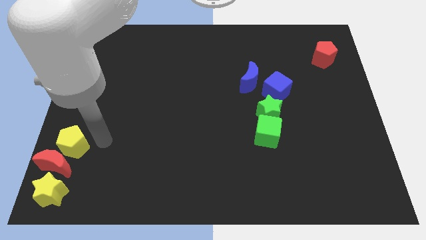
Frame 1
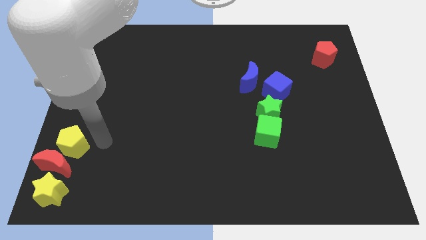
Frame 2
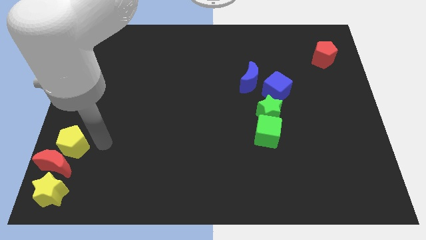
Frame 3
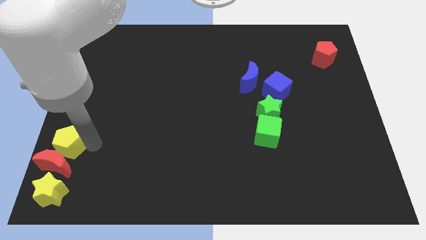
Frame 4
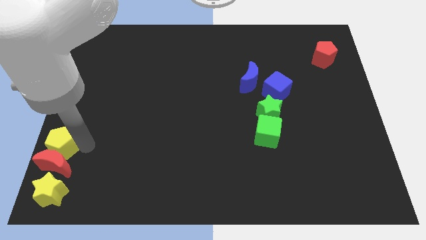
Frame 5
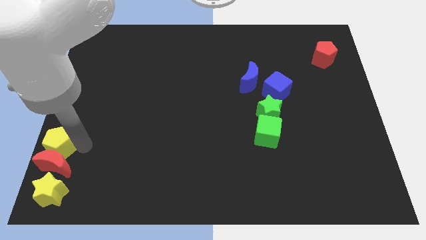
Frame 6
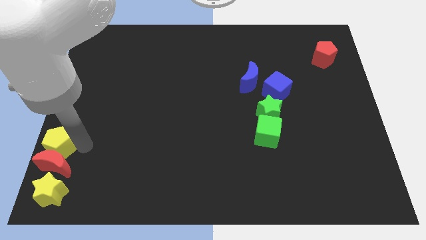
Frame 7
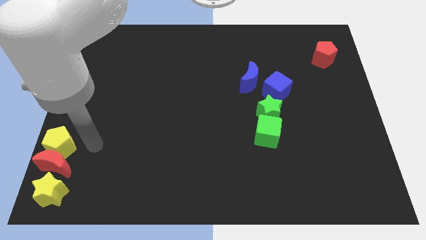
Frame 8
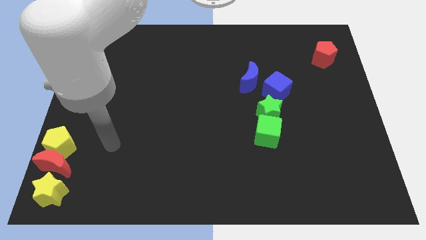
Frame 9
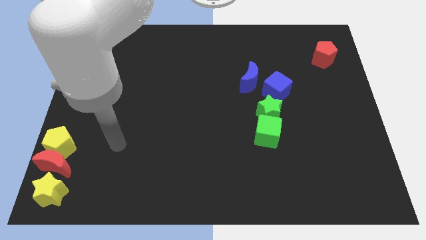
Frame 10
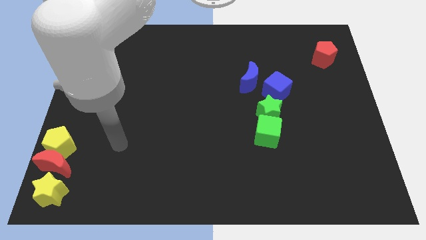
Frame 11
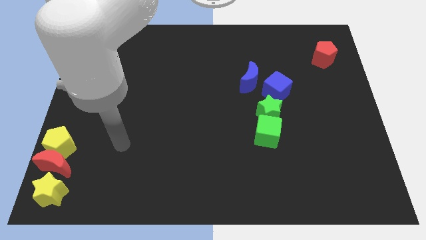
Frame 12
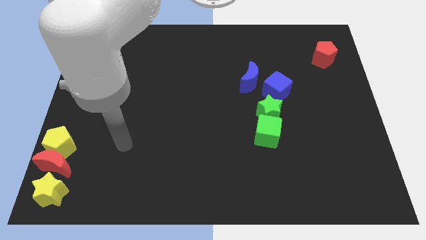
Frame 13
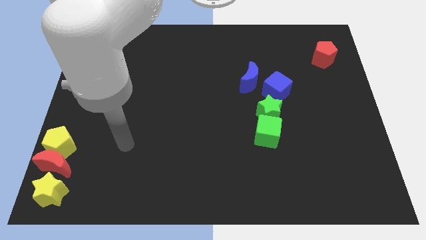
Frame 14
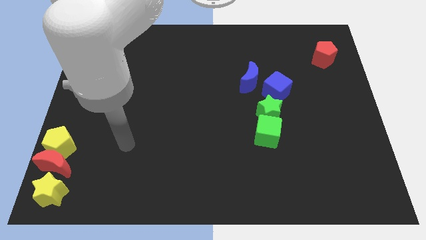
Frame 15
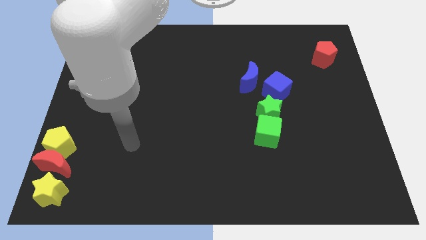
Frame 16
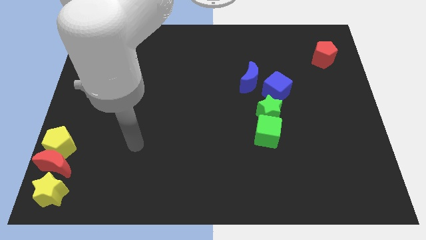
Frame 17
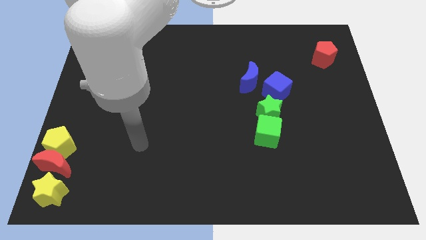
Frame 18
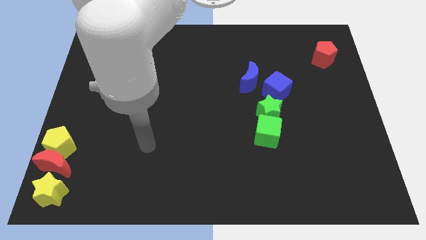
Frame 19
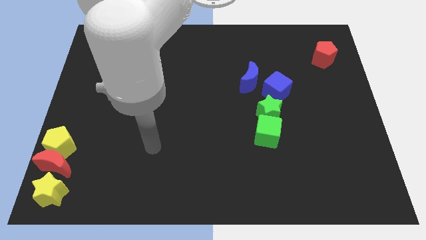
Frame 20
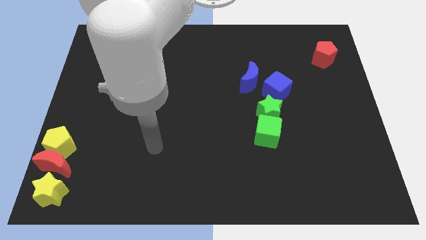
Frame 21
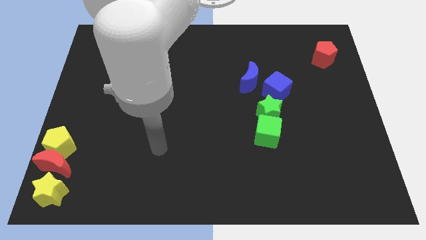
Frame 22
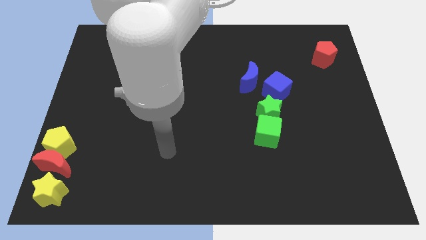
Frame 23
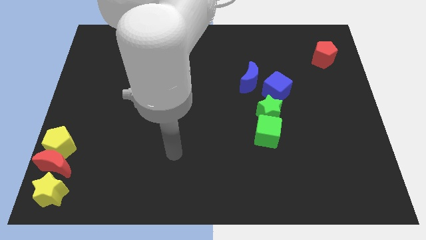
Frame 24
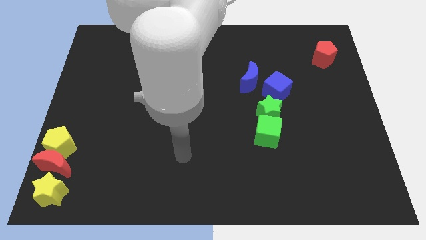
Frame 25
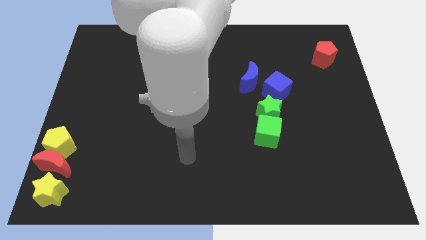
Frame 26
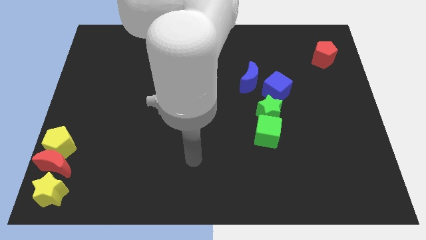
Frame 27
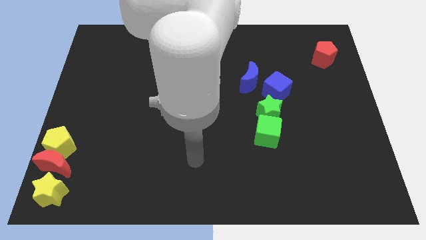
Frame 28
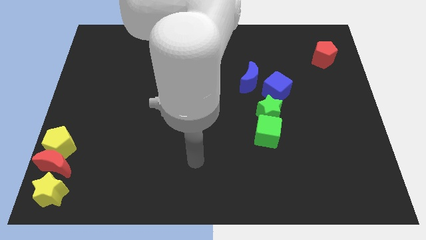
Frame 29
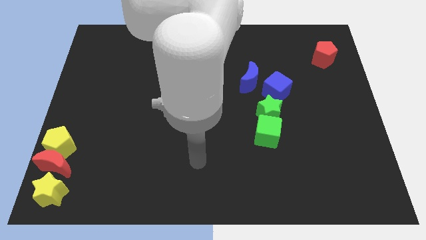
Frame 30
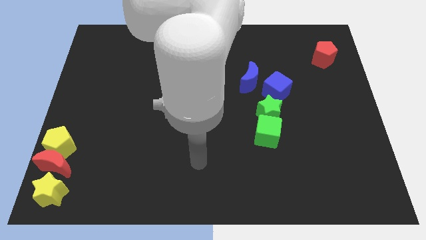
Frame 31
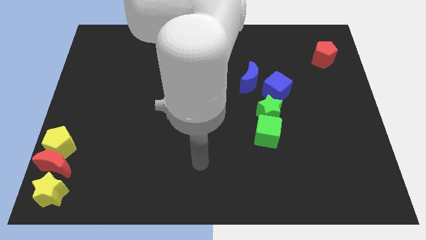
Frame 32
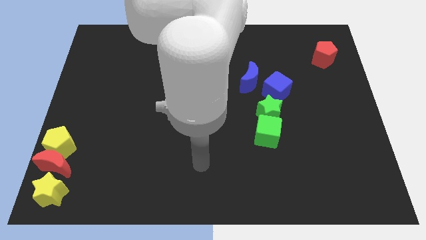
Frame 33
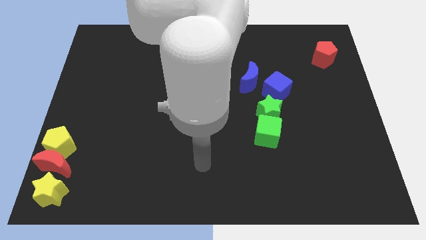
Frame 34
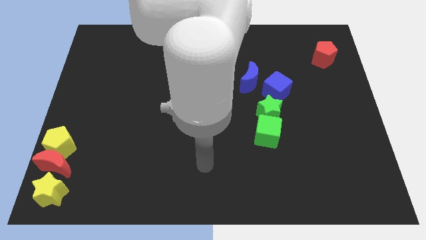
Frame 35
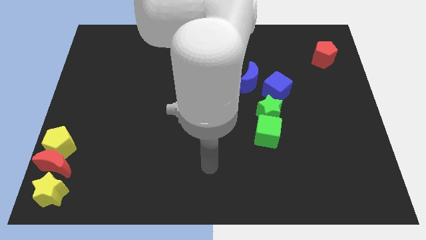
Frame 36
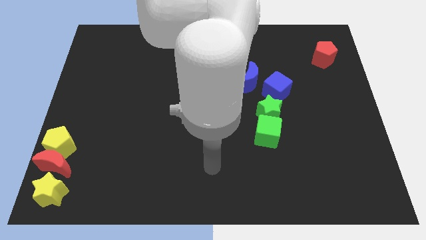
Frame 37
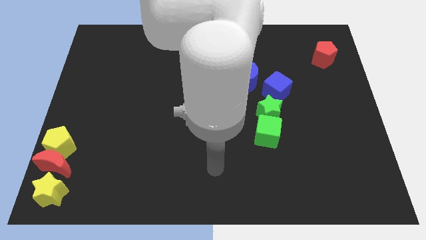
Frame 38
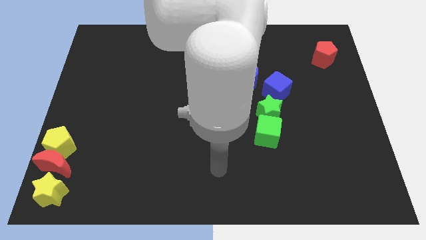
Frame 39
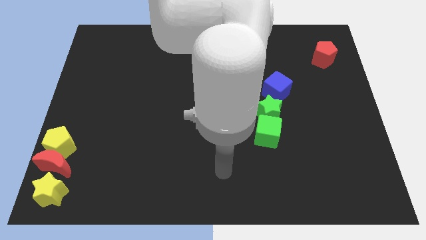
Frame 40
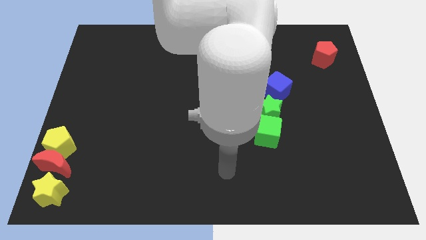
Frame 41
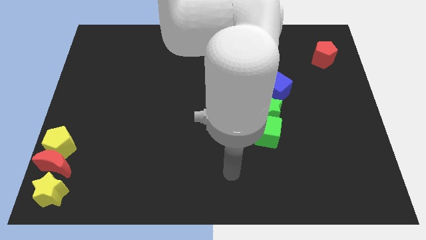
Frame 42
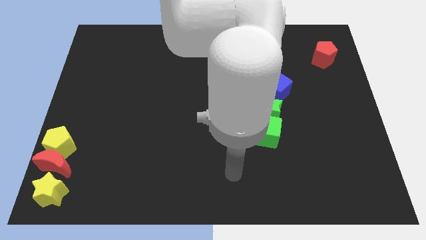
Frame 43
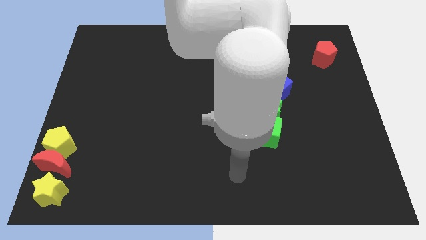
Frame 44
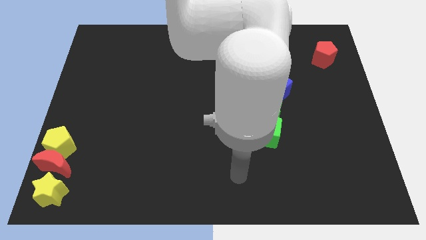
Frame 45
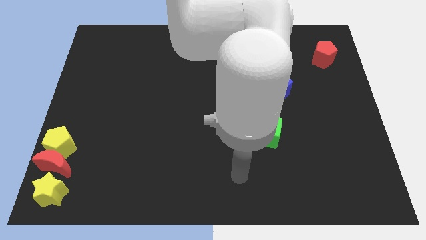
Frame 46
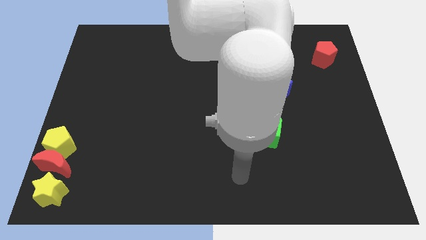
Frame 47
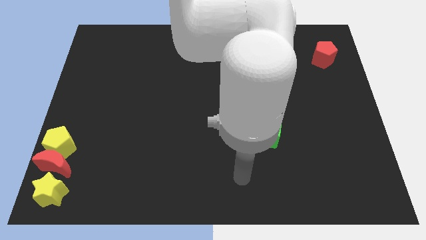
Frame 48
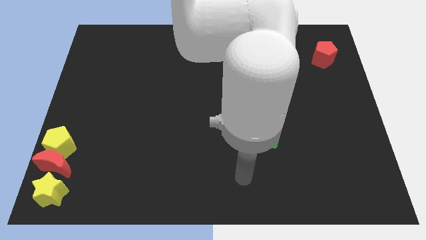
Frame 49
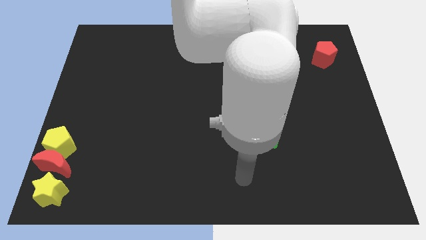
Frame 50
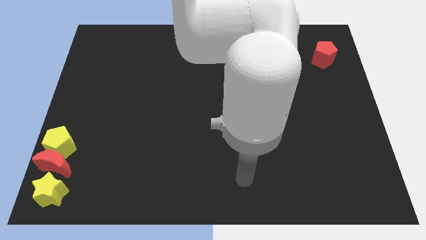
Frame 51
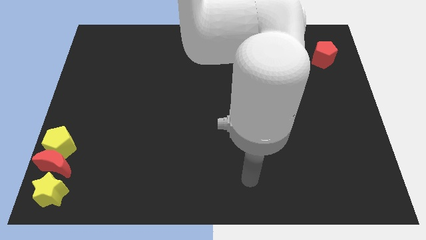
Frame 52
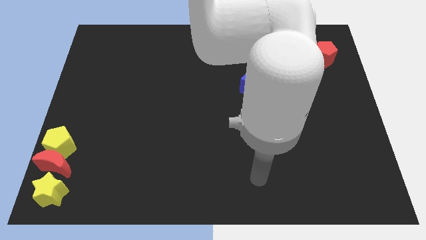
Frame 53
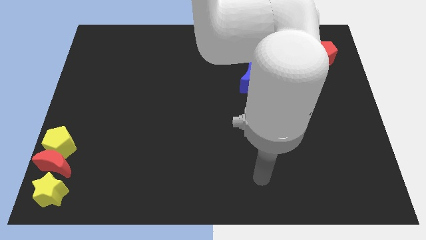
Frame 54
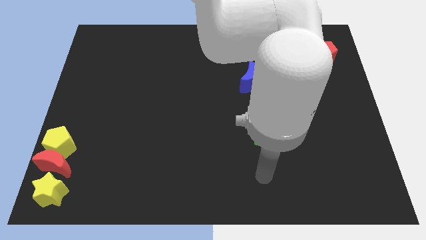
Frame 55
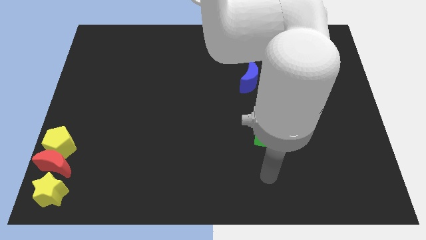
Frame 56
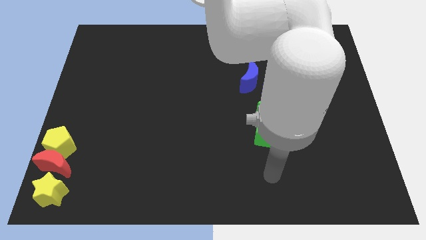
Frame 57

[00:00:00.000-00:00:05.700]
place your arm to the bottom of green cube

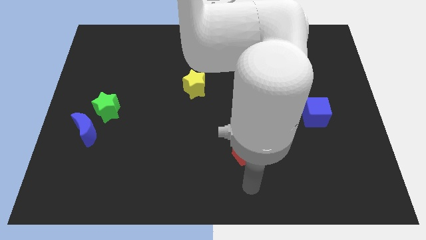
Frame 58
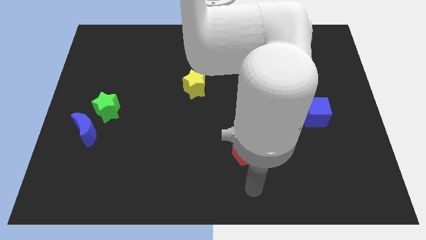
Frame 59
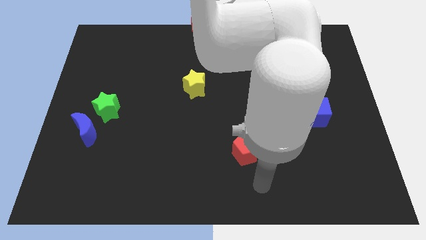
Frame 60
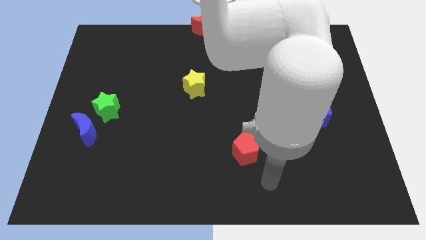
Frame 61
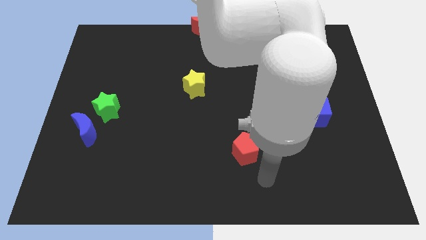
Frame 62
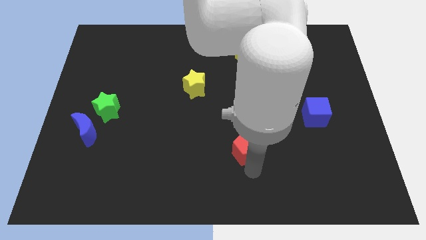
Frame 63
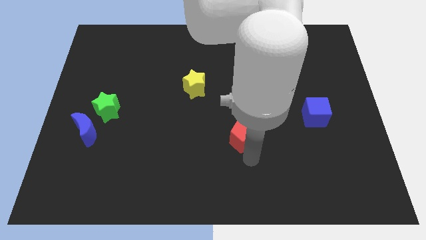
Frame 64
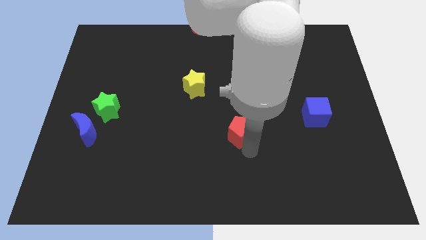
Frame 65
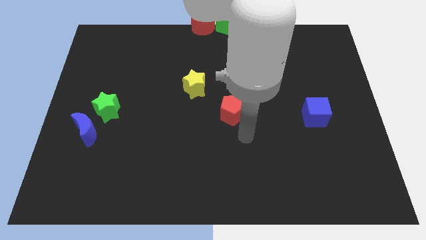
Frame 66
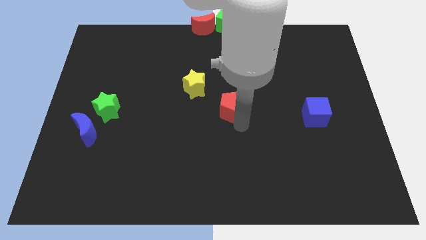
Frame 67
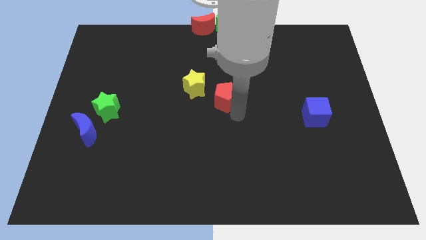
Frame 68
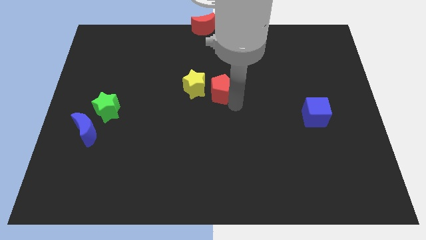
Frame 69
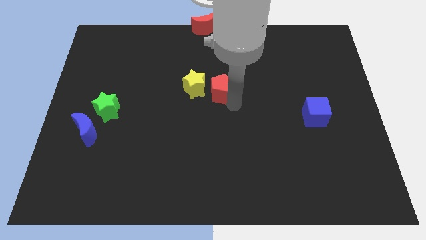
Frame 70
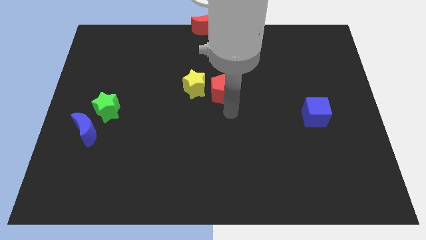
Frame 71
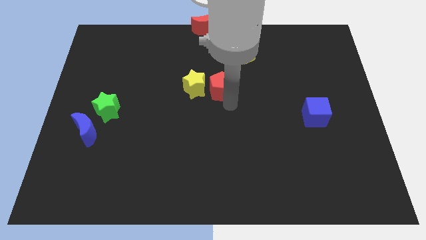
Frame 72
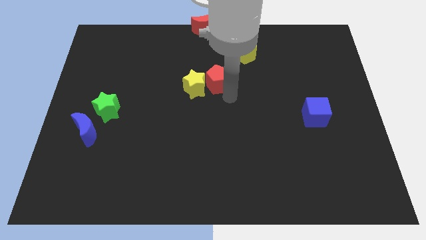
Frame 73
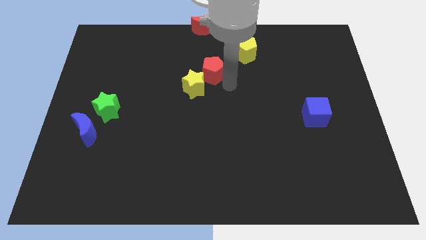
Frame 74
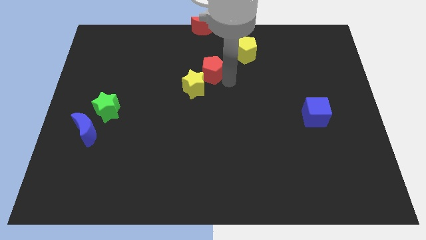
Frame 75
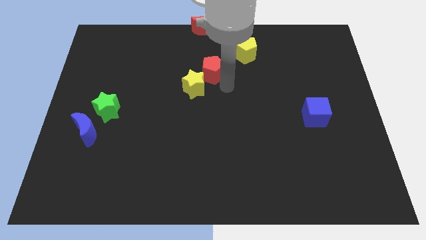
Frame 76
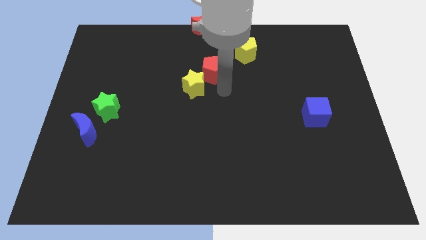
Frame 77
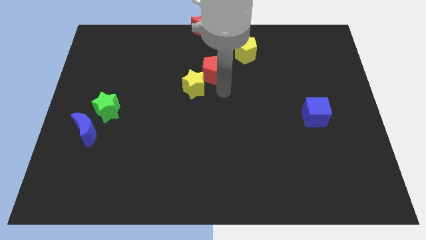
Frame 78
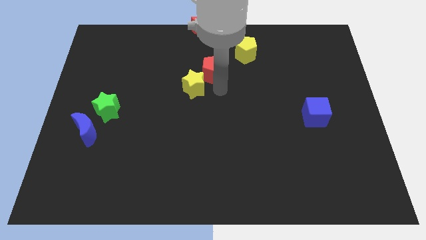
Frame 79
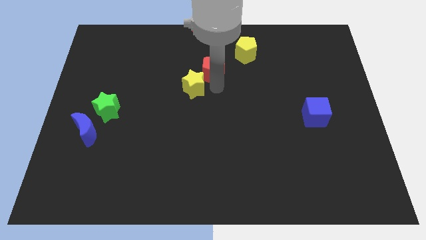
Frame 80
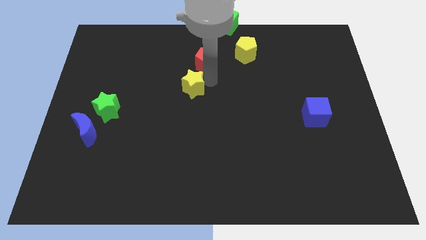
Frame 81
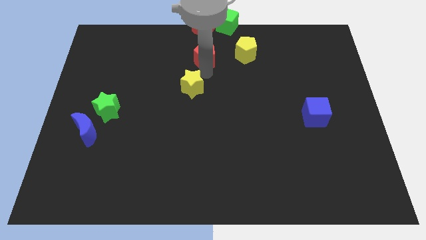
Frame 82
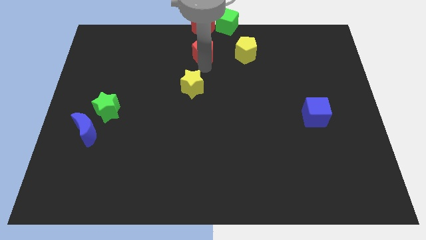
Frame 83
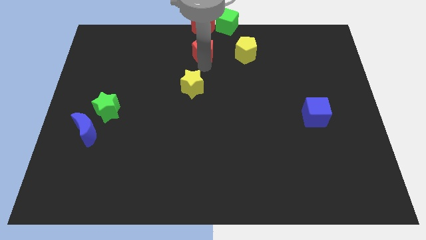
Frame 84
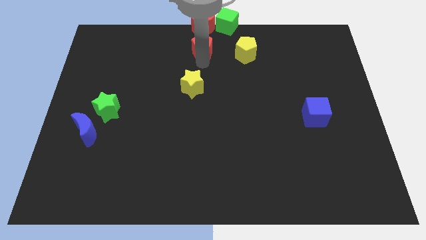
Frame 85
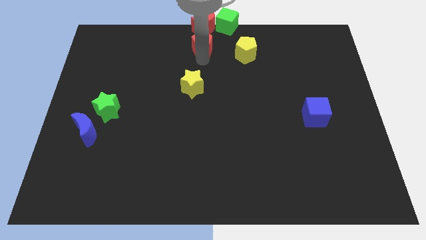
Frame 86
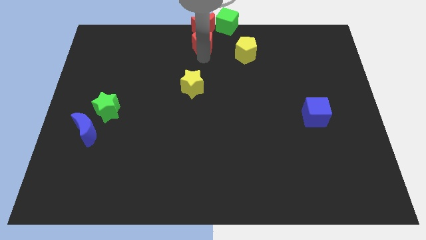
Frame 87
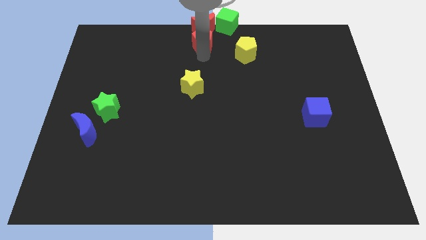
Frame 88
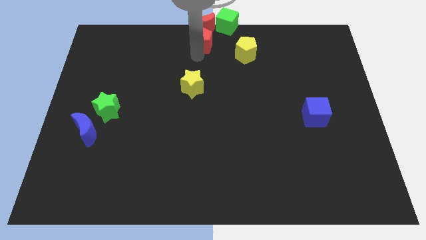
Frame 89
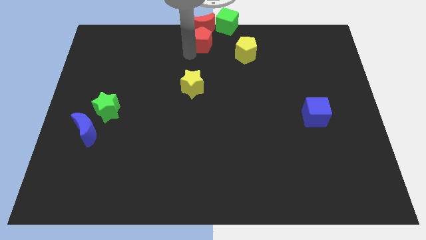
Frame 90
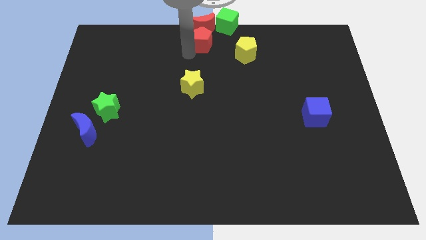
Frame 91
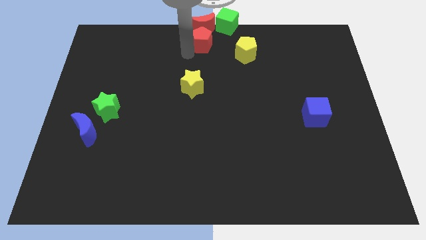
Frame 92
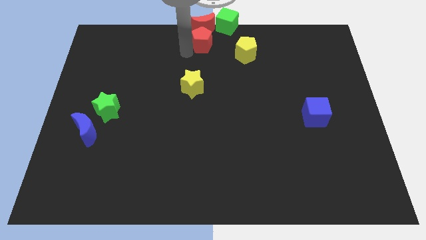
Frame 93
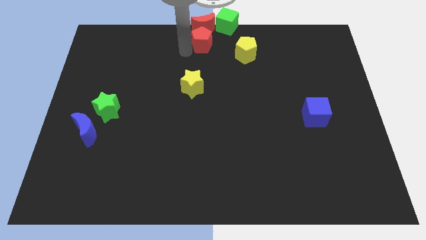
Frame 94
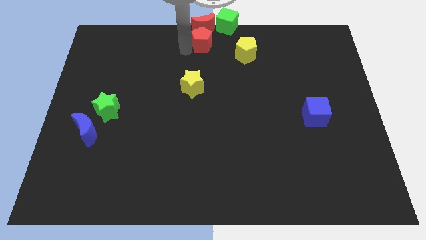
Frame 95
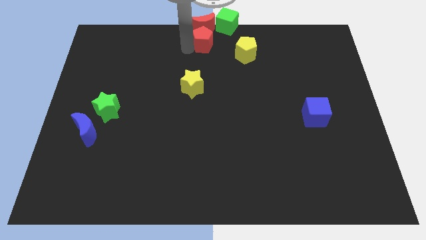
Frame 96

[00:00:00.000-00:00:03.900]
push the red pentagon into the red moon
